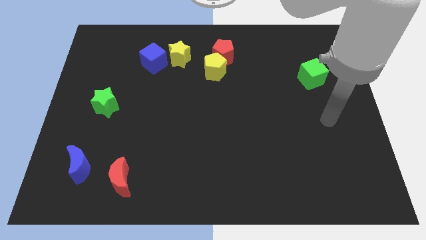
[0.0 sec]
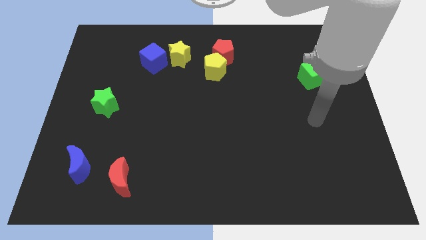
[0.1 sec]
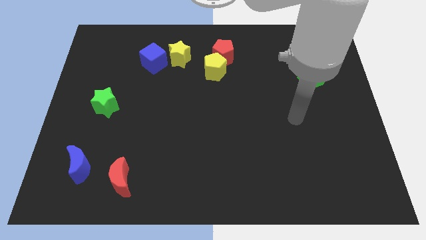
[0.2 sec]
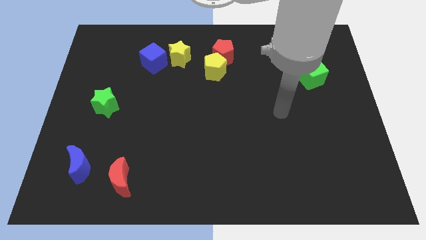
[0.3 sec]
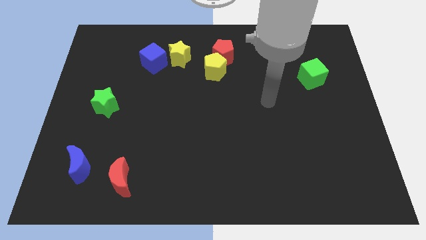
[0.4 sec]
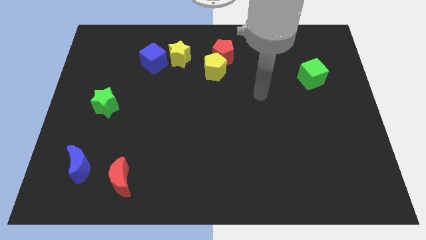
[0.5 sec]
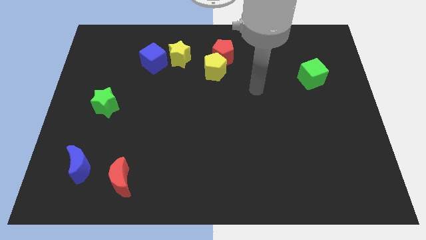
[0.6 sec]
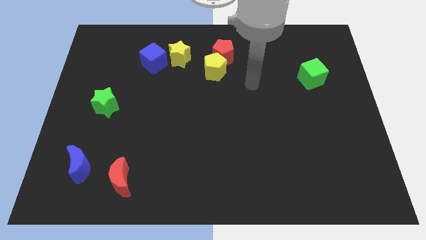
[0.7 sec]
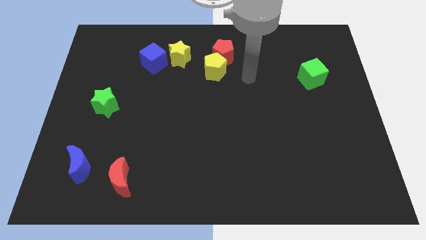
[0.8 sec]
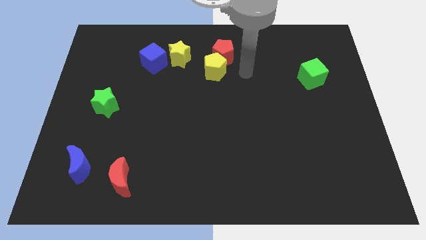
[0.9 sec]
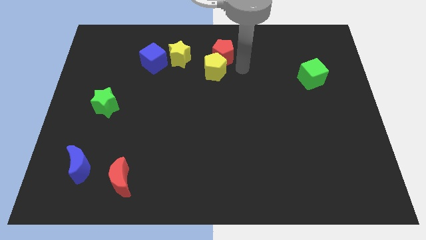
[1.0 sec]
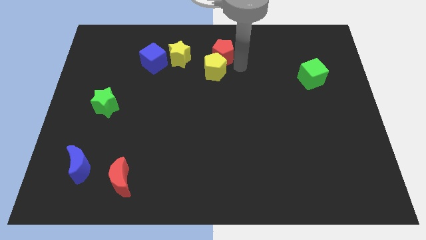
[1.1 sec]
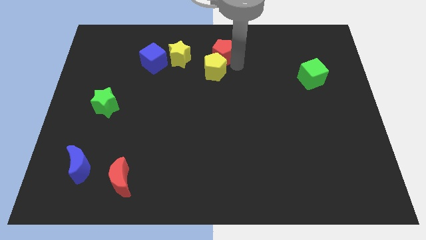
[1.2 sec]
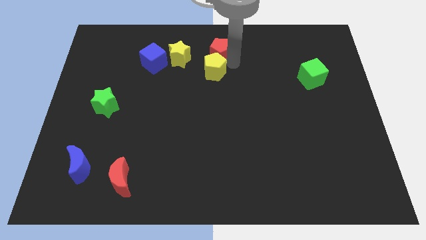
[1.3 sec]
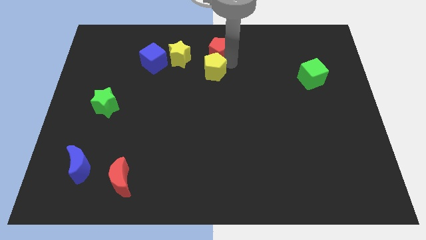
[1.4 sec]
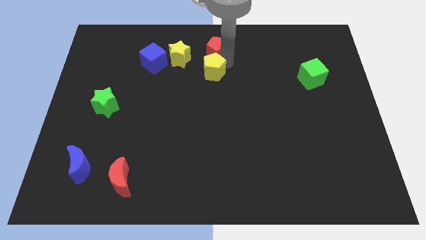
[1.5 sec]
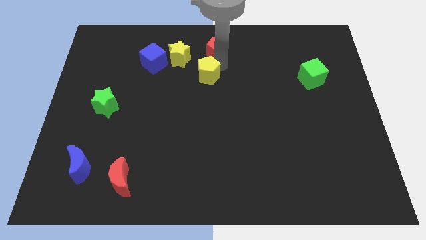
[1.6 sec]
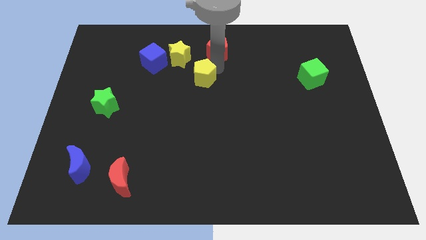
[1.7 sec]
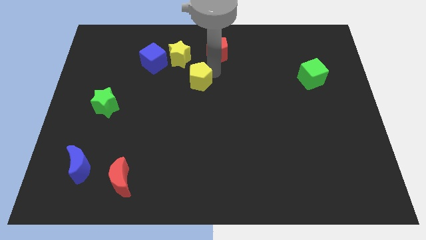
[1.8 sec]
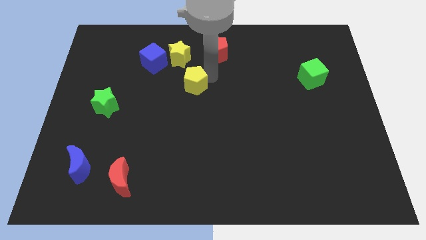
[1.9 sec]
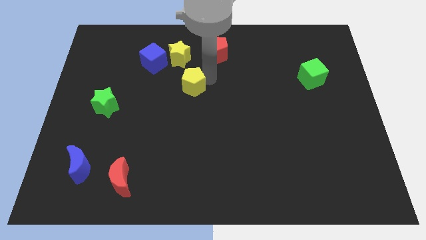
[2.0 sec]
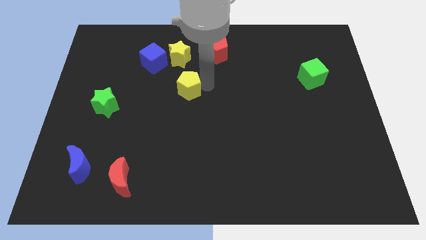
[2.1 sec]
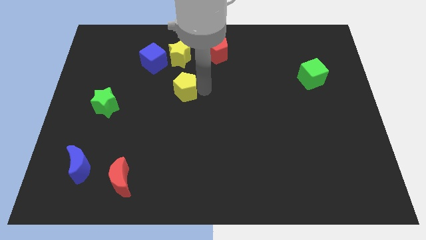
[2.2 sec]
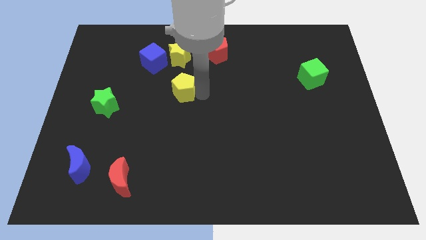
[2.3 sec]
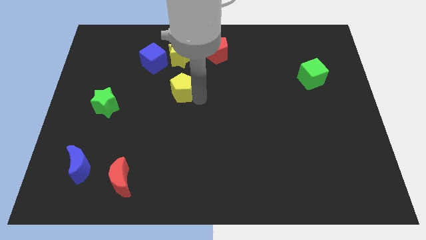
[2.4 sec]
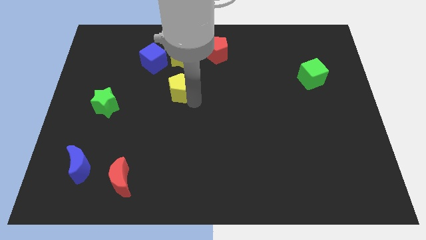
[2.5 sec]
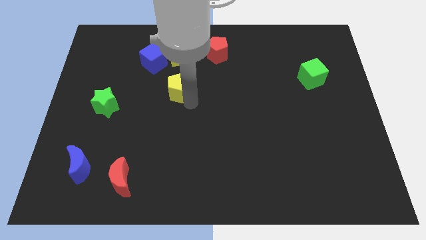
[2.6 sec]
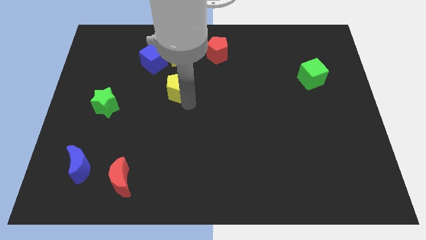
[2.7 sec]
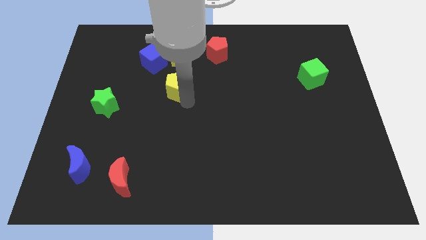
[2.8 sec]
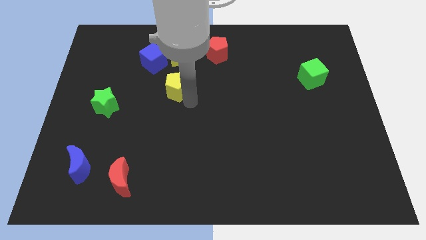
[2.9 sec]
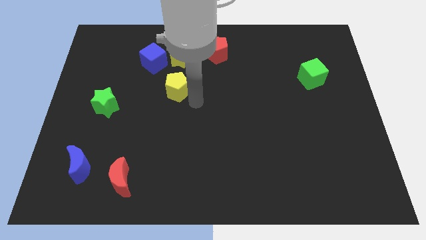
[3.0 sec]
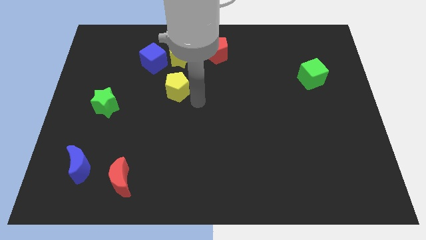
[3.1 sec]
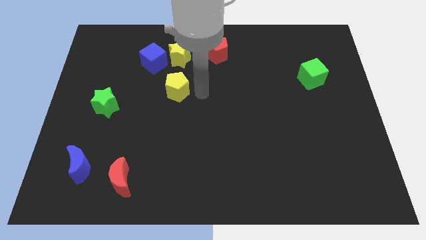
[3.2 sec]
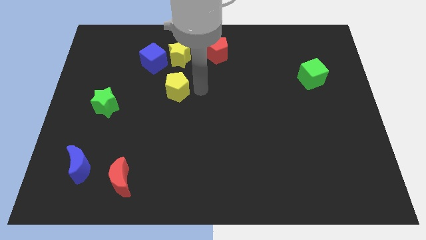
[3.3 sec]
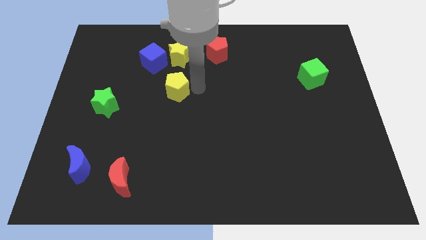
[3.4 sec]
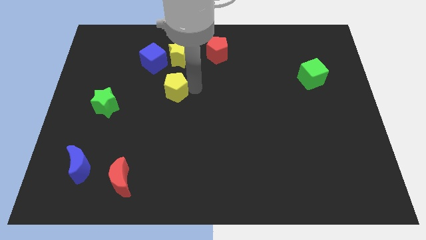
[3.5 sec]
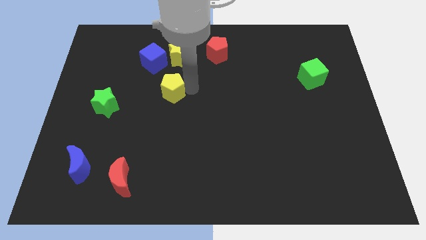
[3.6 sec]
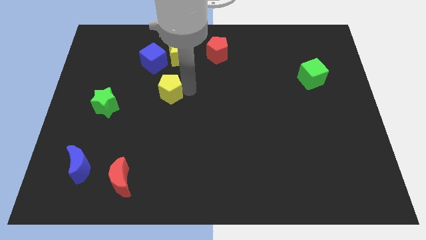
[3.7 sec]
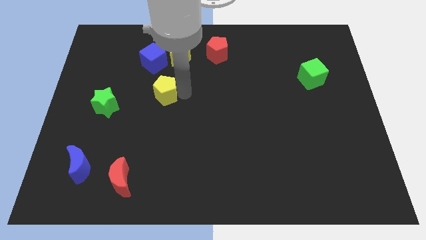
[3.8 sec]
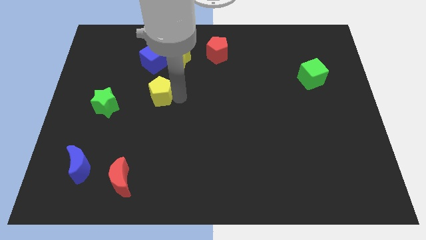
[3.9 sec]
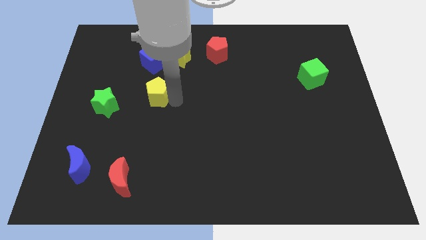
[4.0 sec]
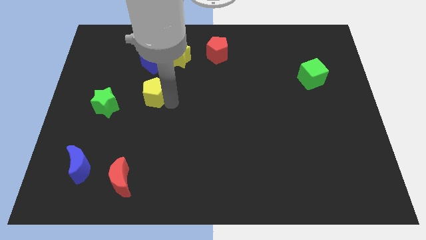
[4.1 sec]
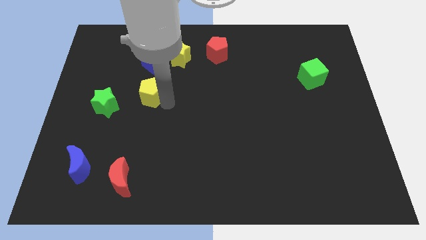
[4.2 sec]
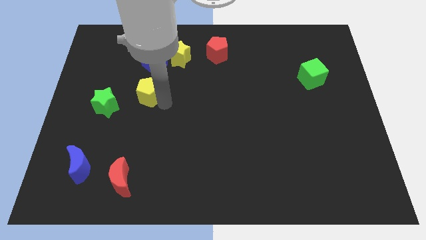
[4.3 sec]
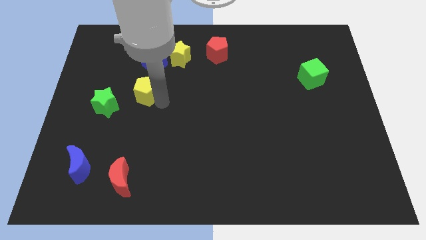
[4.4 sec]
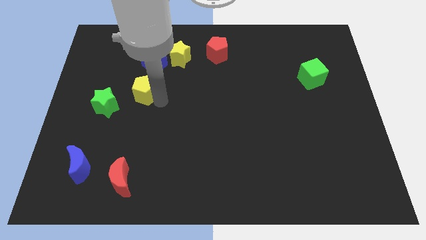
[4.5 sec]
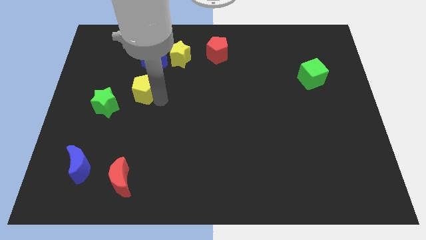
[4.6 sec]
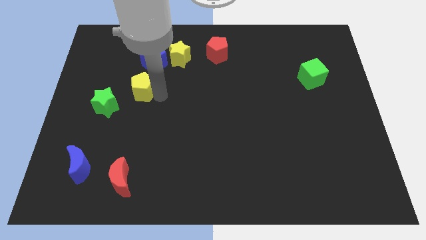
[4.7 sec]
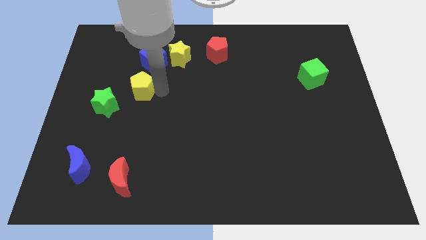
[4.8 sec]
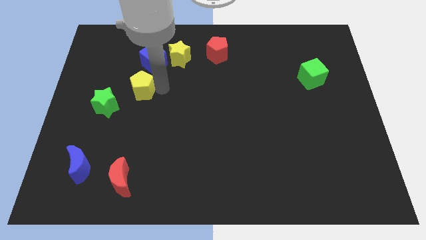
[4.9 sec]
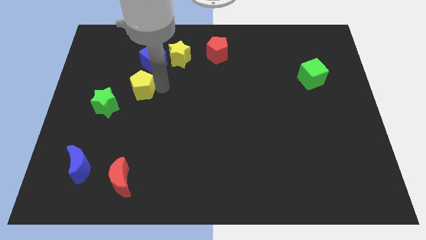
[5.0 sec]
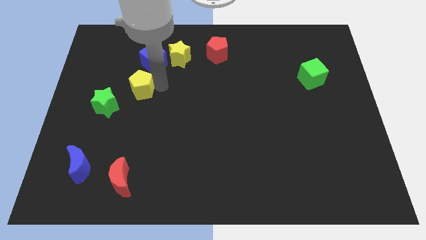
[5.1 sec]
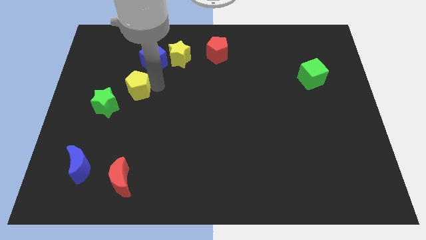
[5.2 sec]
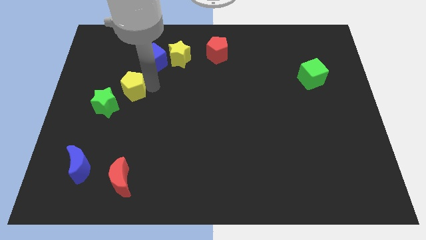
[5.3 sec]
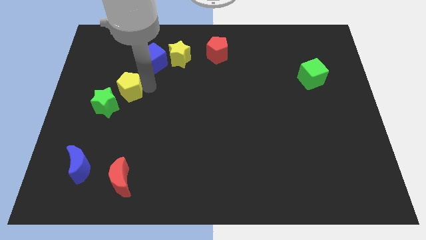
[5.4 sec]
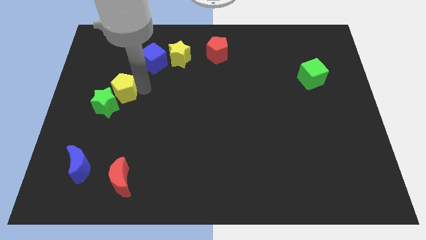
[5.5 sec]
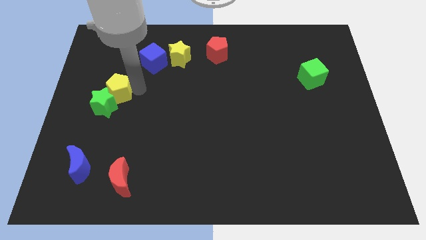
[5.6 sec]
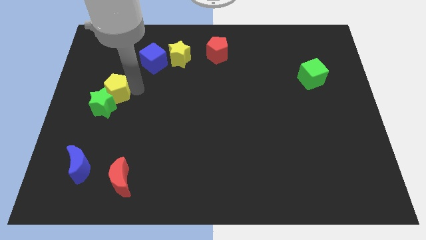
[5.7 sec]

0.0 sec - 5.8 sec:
slide the yellow pentagon to the green star

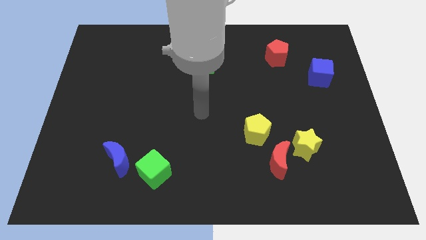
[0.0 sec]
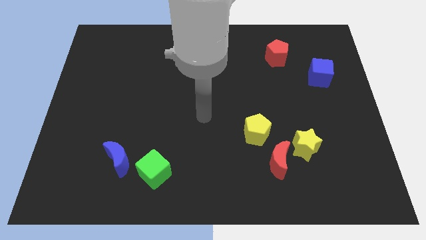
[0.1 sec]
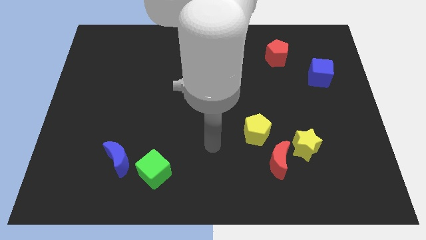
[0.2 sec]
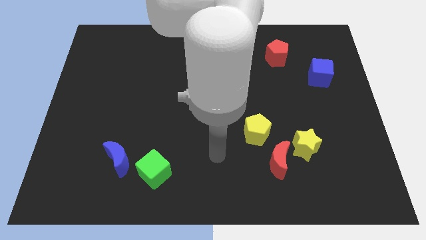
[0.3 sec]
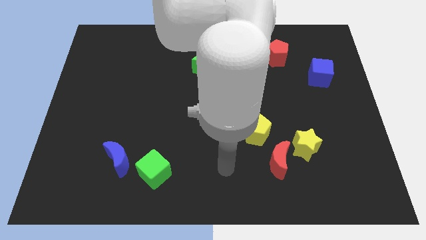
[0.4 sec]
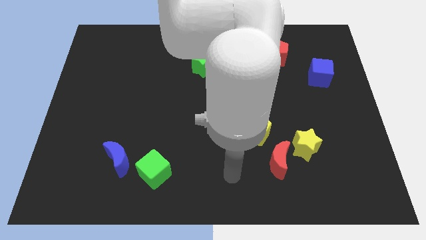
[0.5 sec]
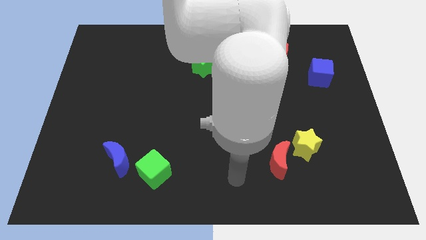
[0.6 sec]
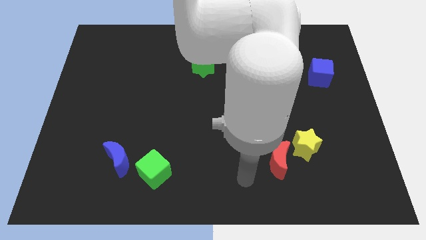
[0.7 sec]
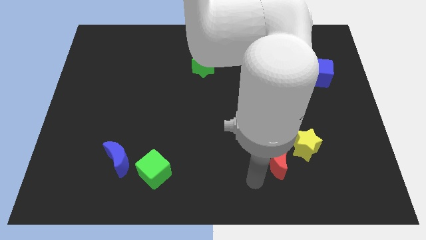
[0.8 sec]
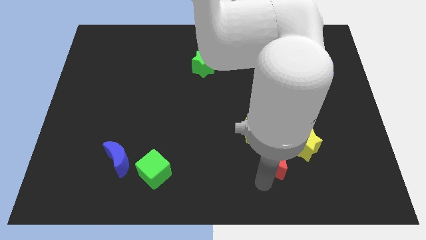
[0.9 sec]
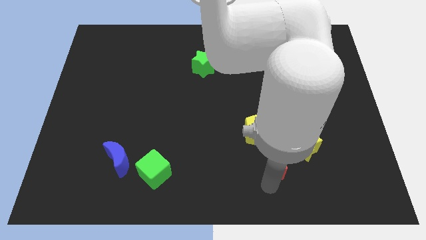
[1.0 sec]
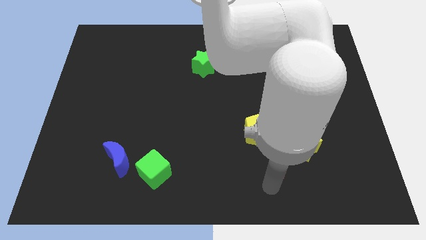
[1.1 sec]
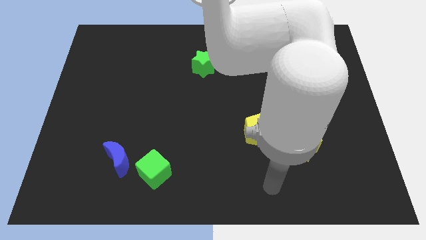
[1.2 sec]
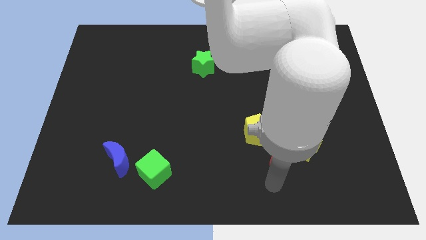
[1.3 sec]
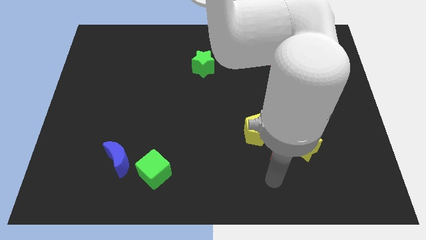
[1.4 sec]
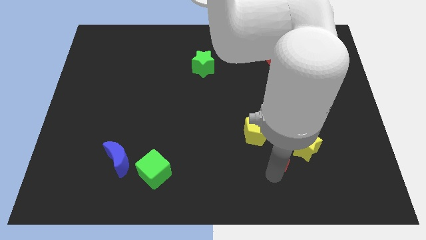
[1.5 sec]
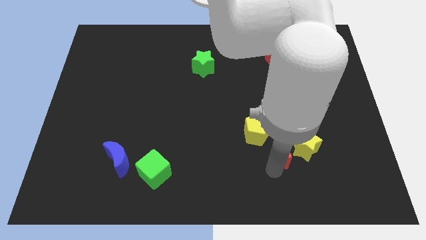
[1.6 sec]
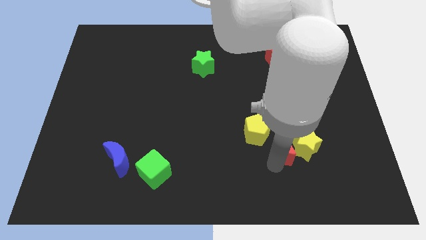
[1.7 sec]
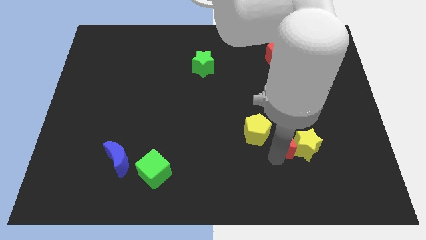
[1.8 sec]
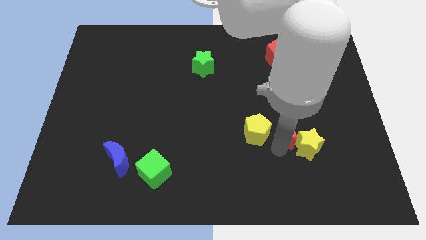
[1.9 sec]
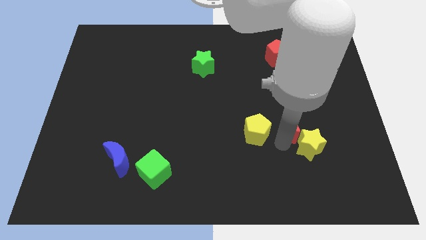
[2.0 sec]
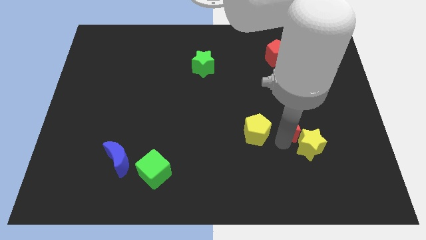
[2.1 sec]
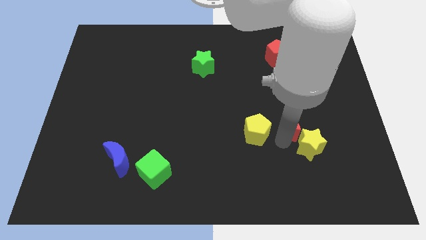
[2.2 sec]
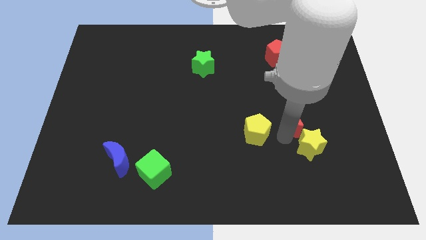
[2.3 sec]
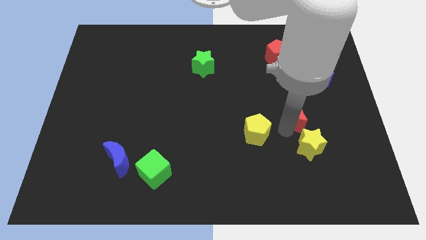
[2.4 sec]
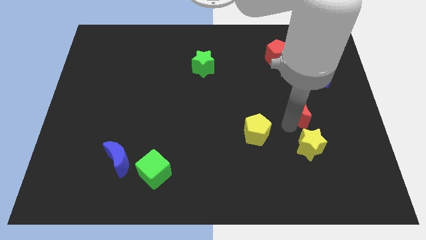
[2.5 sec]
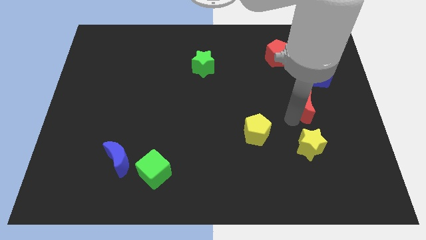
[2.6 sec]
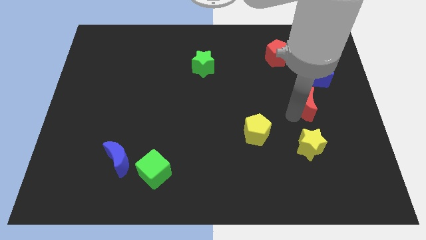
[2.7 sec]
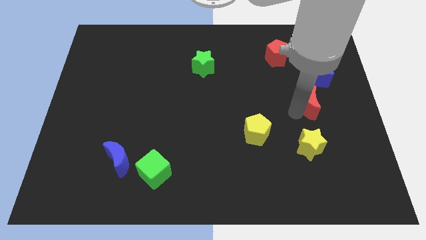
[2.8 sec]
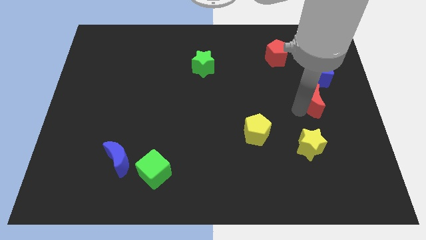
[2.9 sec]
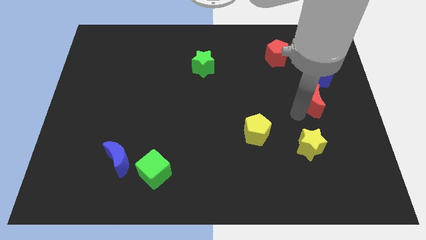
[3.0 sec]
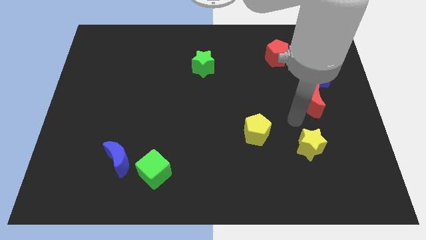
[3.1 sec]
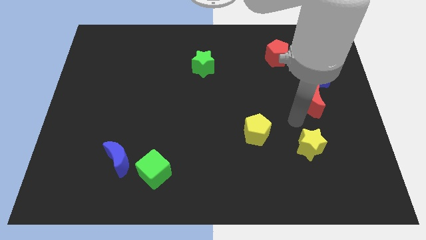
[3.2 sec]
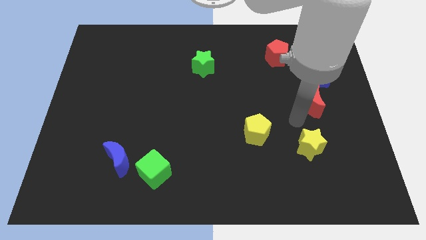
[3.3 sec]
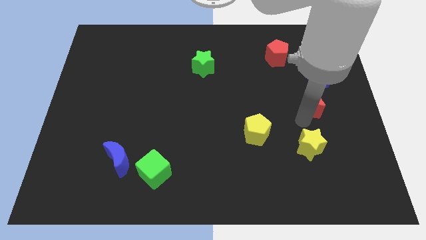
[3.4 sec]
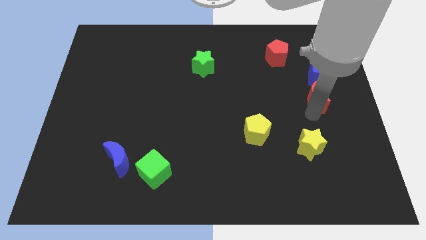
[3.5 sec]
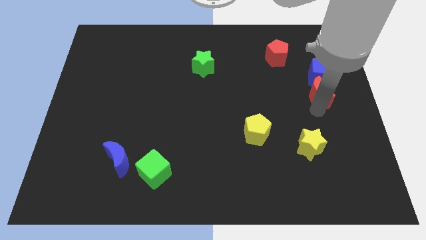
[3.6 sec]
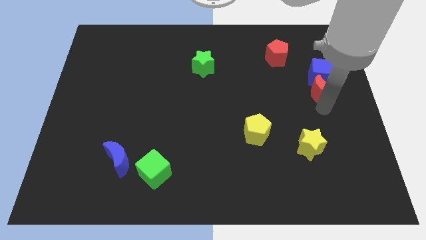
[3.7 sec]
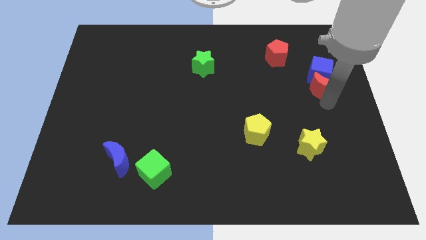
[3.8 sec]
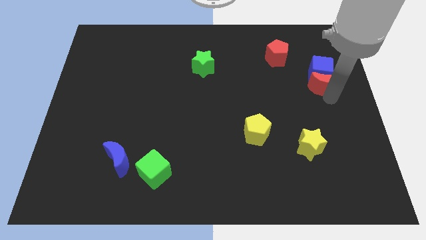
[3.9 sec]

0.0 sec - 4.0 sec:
put the red moon towards the blue cube
